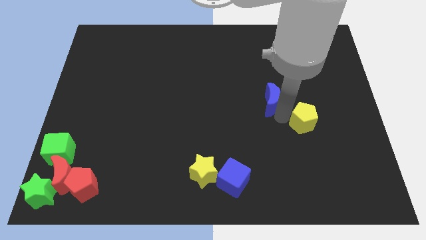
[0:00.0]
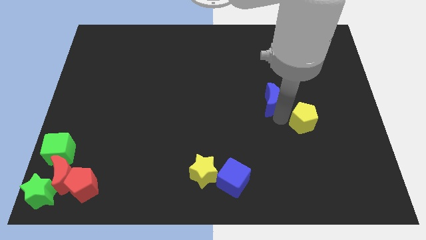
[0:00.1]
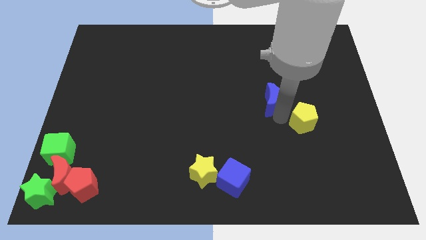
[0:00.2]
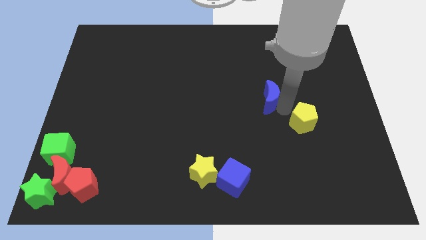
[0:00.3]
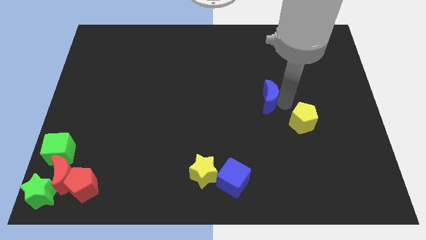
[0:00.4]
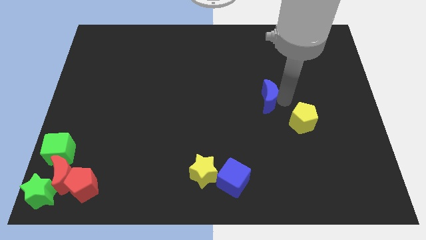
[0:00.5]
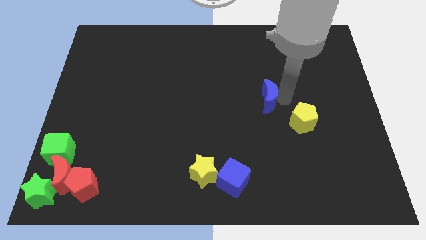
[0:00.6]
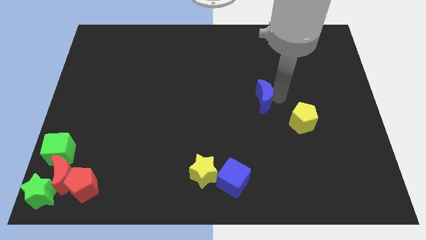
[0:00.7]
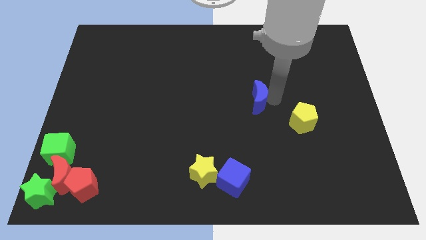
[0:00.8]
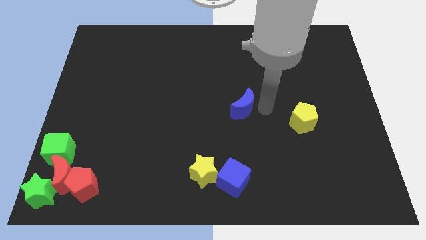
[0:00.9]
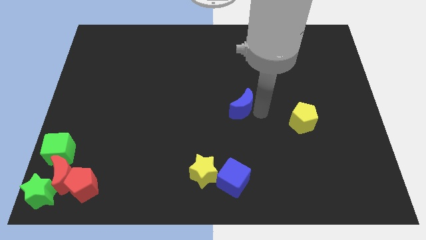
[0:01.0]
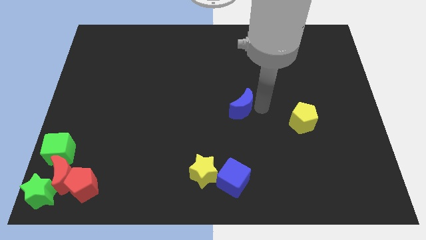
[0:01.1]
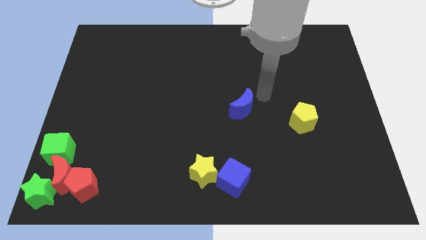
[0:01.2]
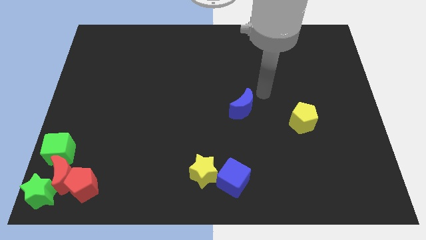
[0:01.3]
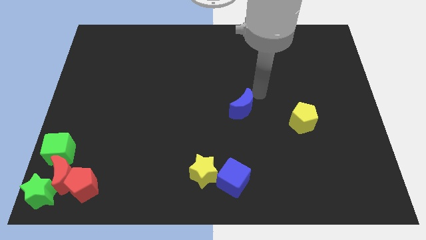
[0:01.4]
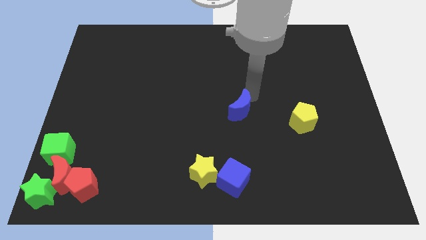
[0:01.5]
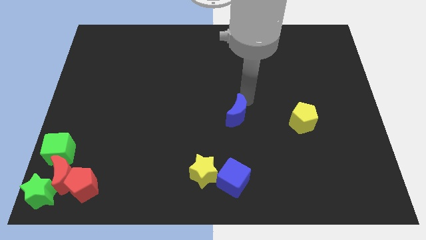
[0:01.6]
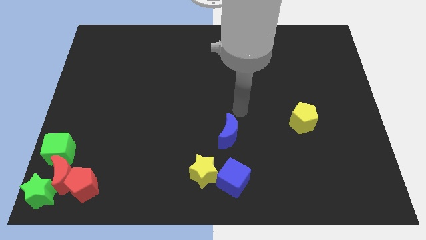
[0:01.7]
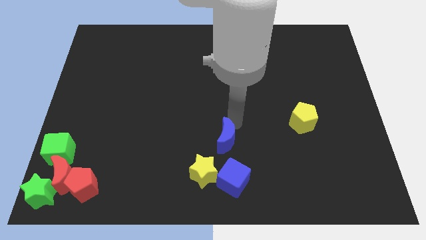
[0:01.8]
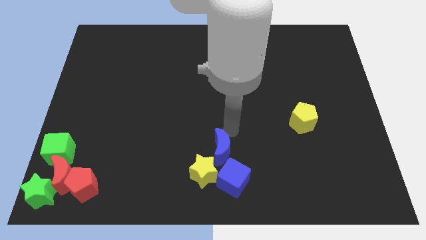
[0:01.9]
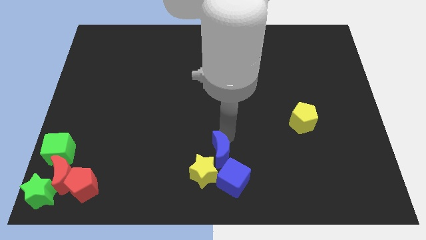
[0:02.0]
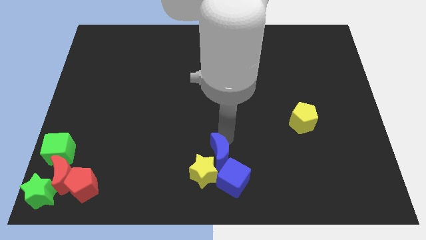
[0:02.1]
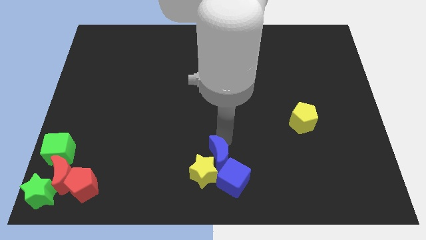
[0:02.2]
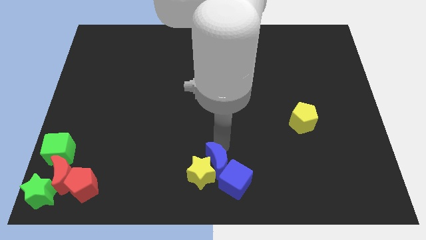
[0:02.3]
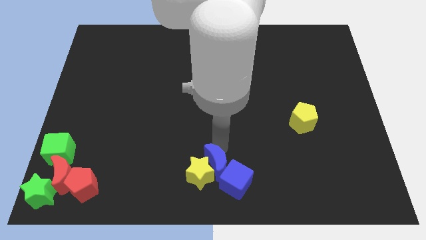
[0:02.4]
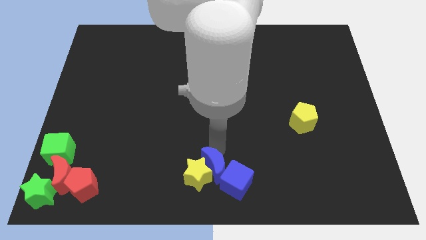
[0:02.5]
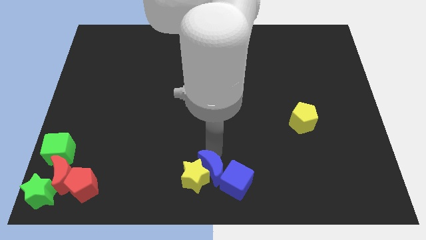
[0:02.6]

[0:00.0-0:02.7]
place blue crescent in between the yellow star and blue cube

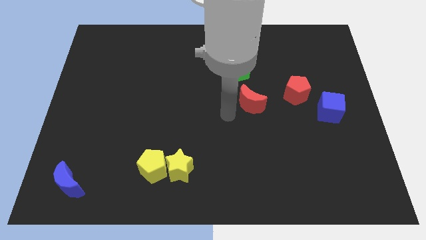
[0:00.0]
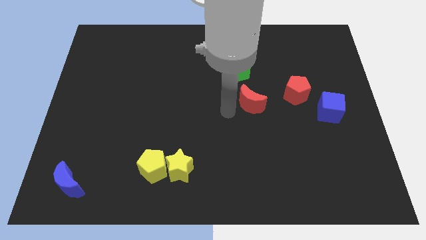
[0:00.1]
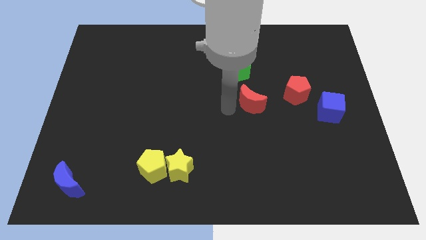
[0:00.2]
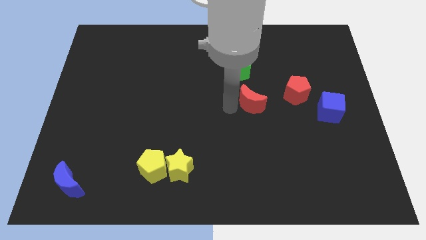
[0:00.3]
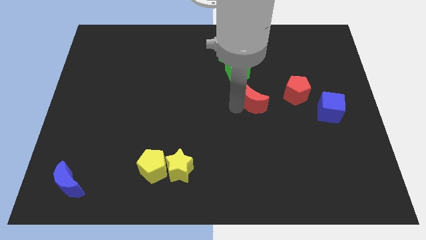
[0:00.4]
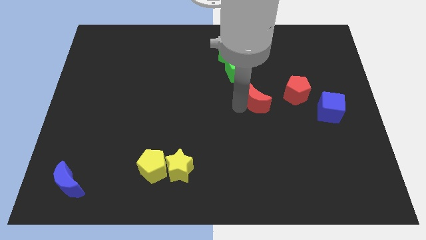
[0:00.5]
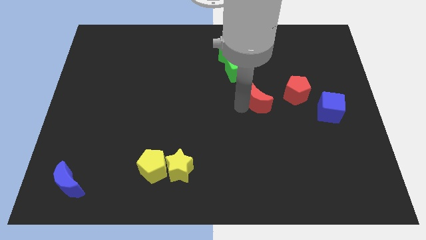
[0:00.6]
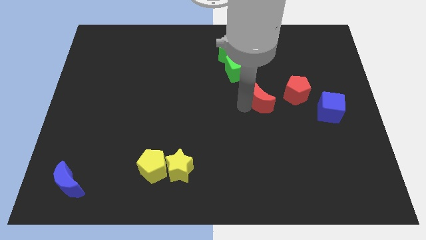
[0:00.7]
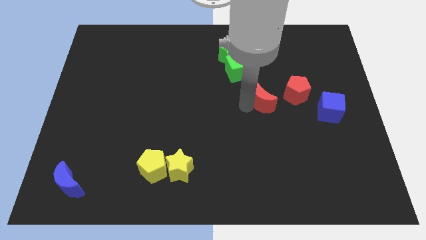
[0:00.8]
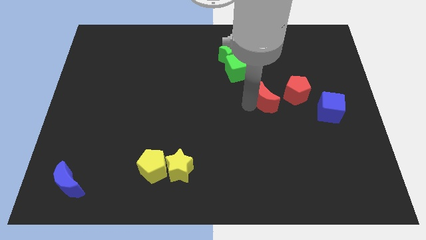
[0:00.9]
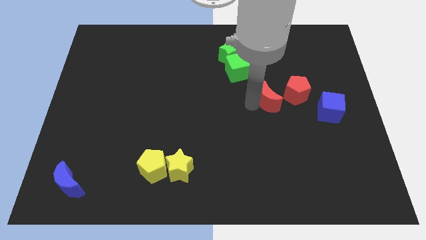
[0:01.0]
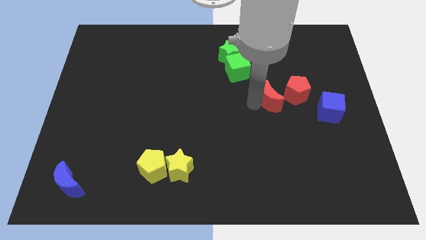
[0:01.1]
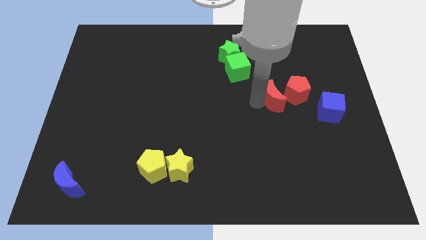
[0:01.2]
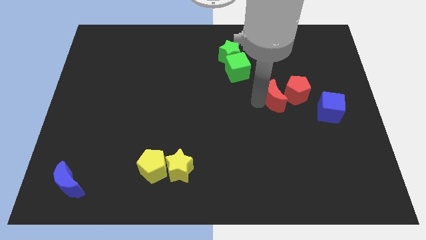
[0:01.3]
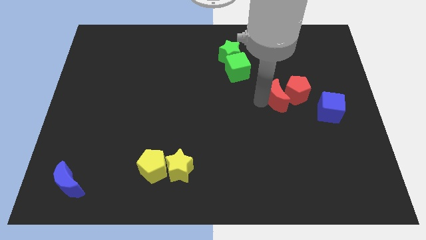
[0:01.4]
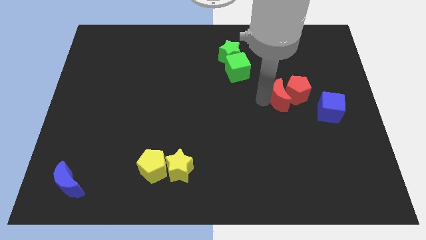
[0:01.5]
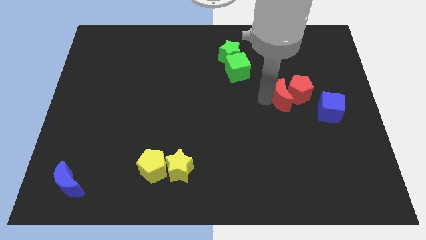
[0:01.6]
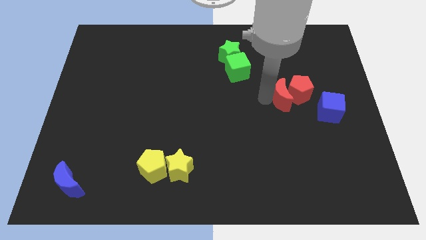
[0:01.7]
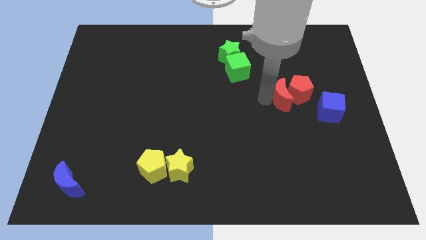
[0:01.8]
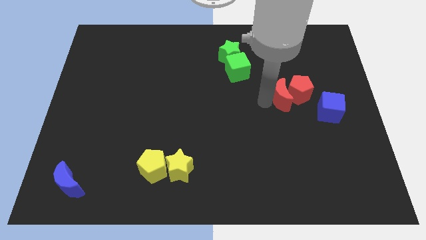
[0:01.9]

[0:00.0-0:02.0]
push the red crescent into the red pentagon

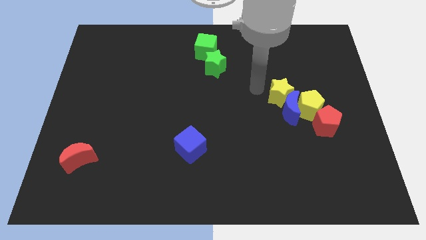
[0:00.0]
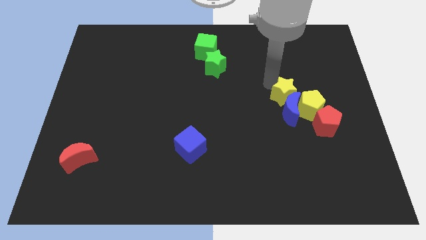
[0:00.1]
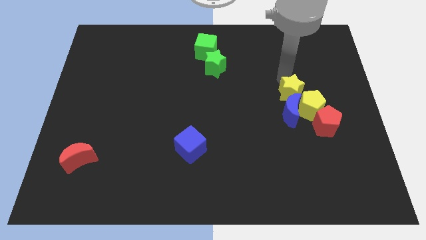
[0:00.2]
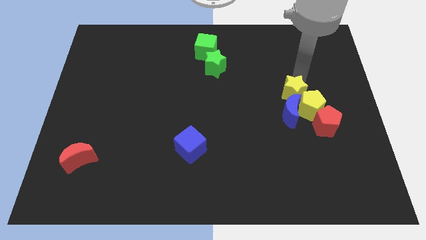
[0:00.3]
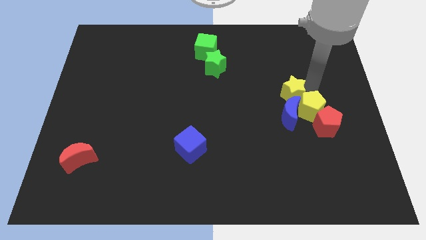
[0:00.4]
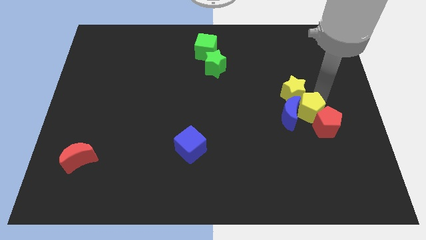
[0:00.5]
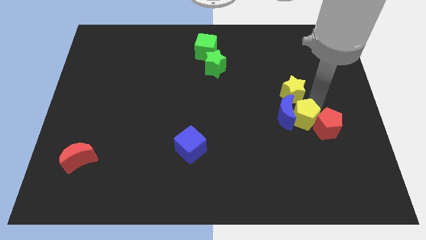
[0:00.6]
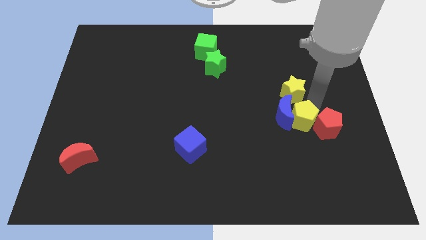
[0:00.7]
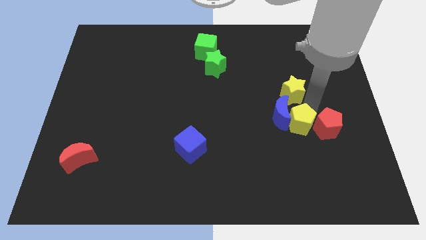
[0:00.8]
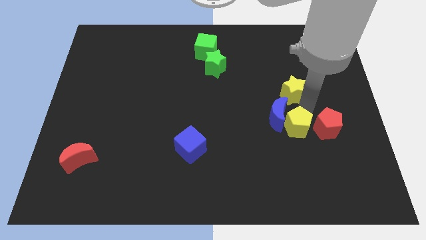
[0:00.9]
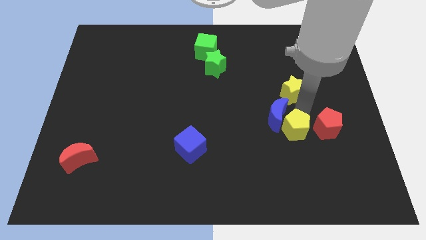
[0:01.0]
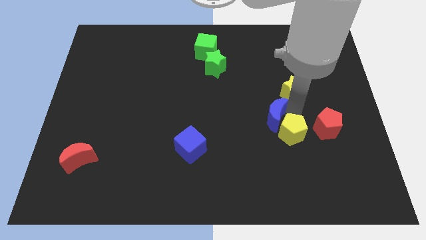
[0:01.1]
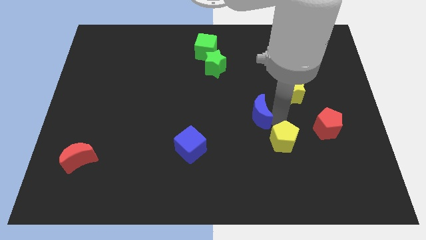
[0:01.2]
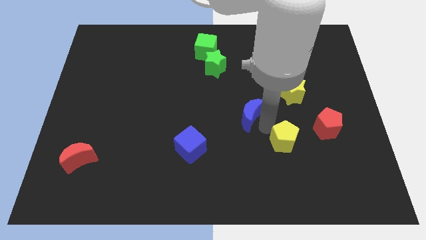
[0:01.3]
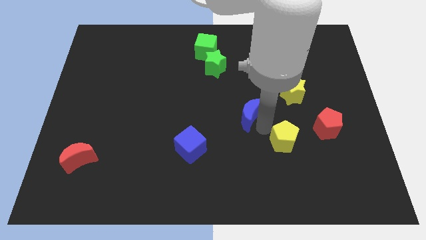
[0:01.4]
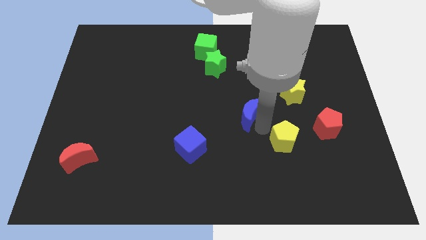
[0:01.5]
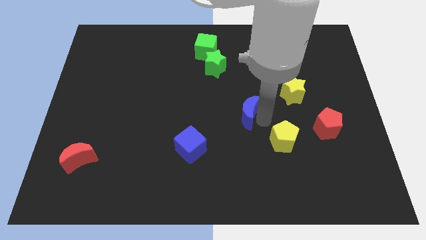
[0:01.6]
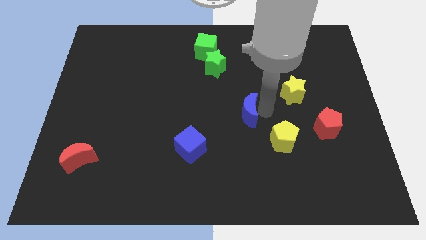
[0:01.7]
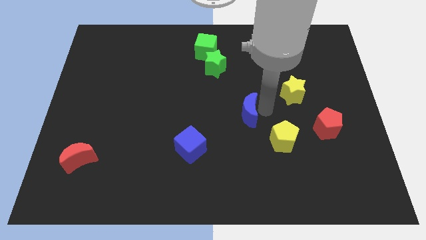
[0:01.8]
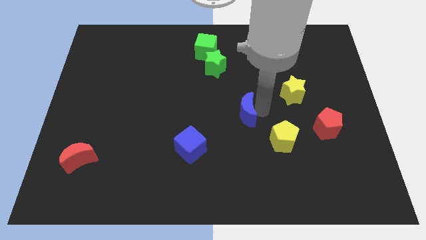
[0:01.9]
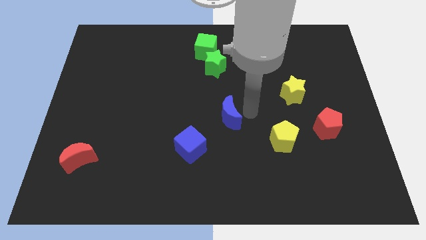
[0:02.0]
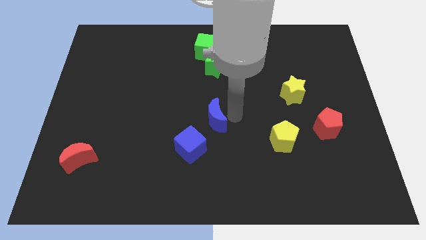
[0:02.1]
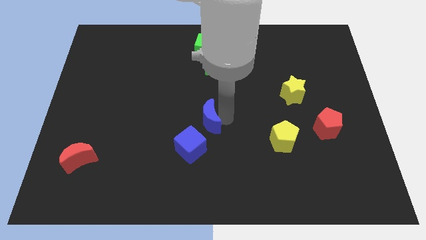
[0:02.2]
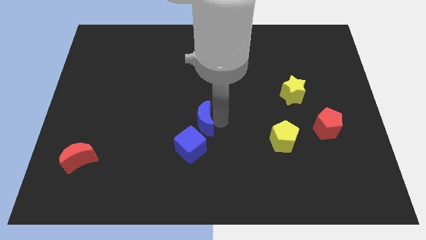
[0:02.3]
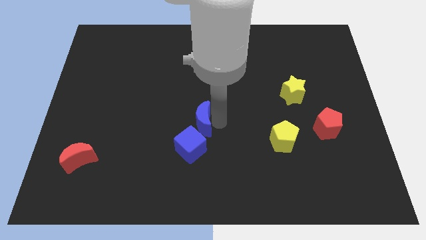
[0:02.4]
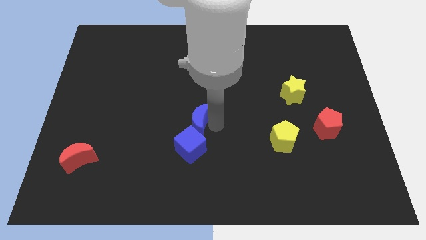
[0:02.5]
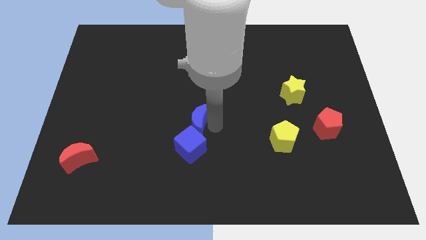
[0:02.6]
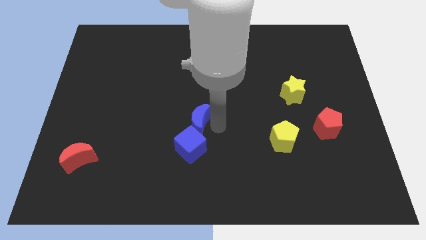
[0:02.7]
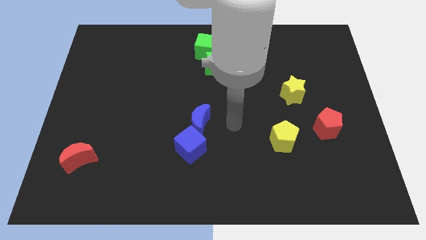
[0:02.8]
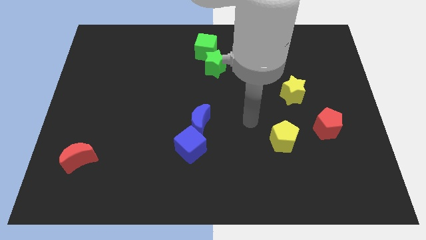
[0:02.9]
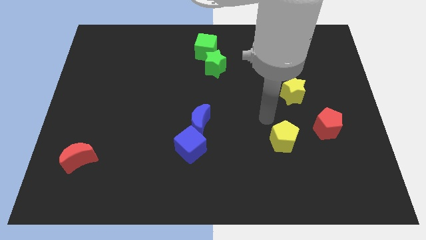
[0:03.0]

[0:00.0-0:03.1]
make the blue moon touch the top side of the blue cube

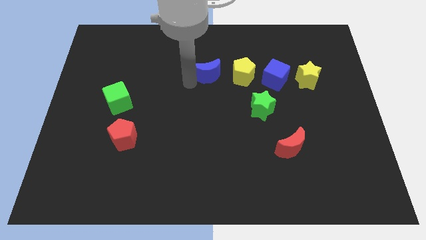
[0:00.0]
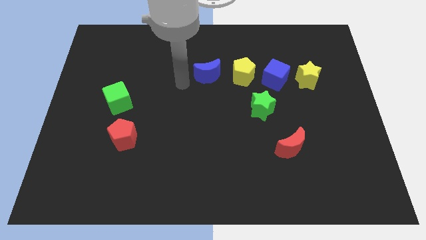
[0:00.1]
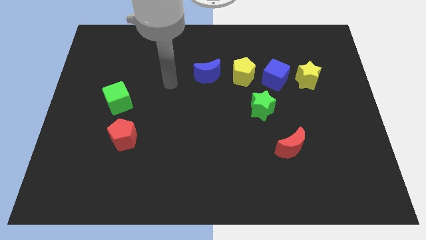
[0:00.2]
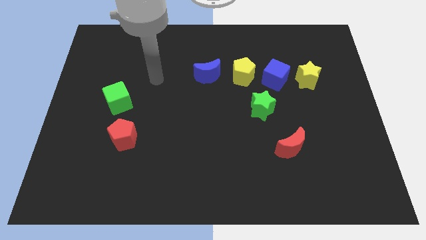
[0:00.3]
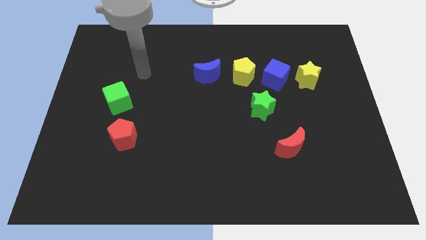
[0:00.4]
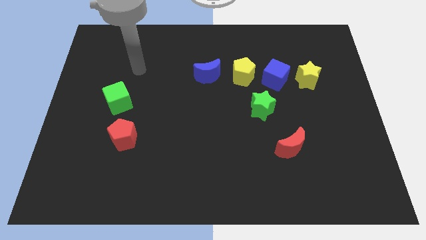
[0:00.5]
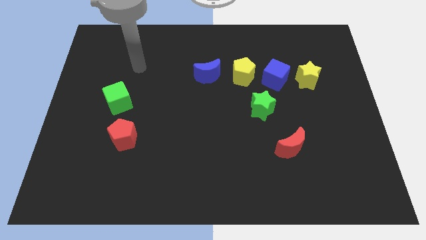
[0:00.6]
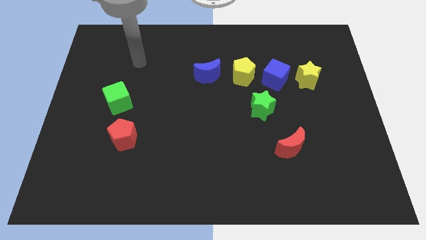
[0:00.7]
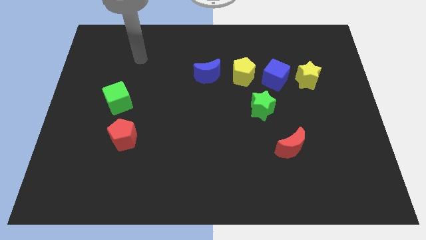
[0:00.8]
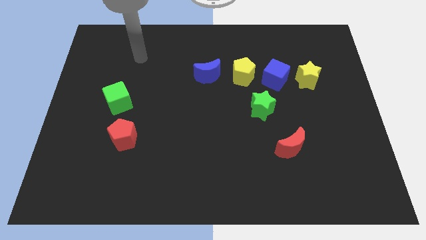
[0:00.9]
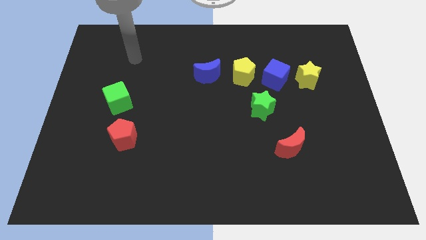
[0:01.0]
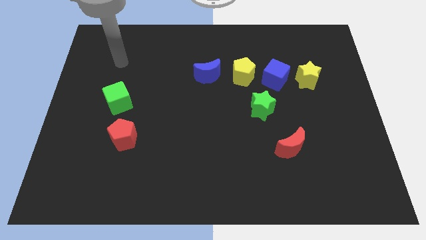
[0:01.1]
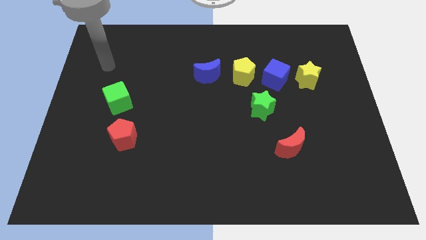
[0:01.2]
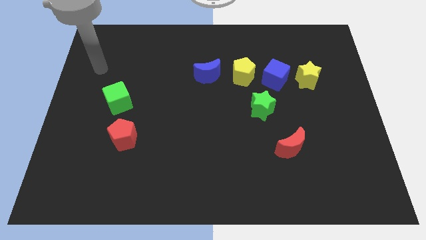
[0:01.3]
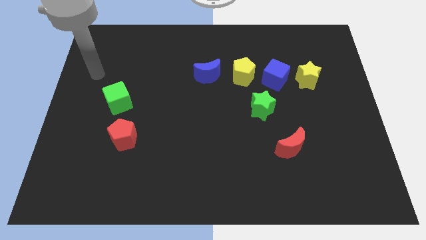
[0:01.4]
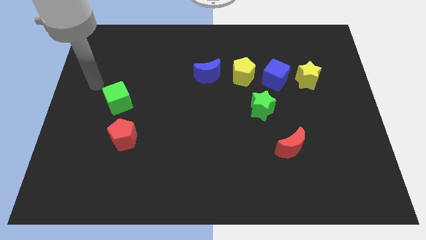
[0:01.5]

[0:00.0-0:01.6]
move the arm away from the blue moon
